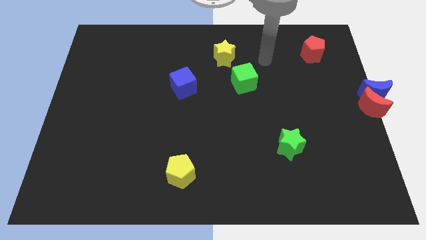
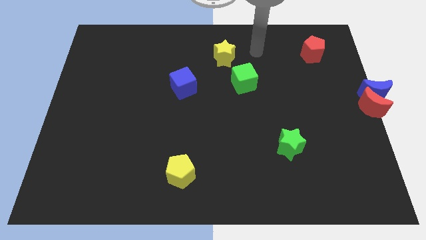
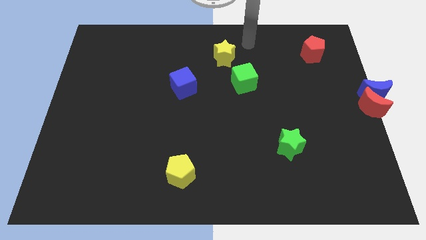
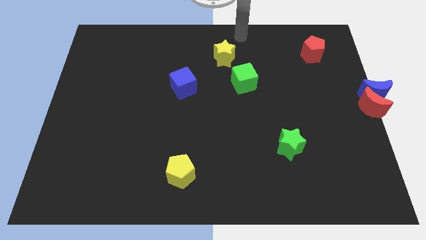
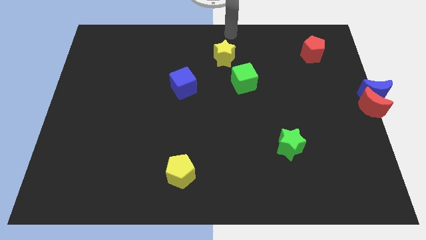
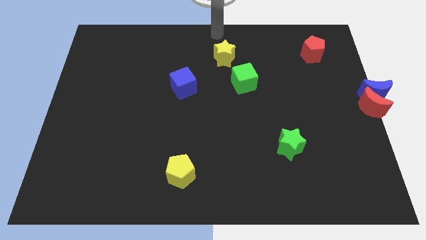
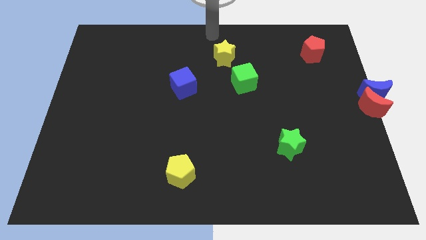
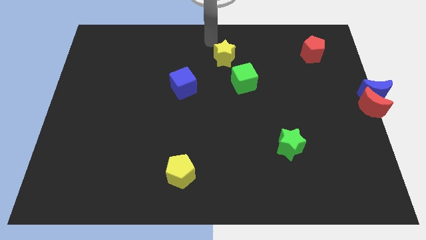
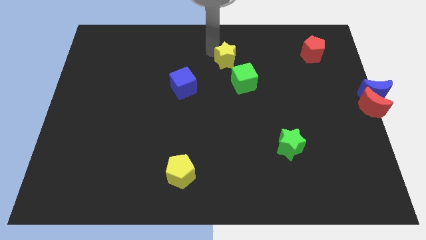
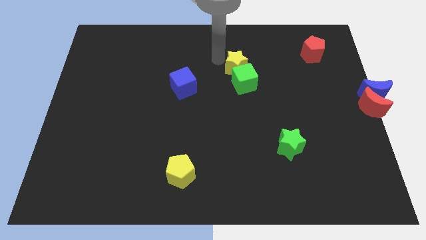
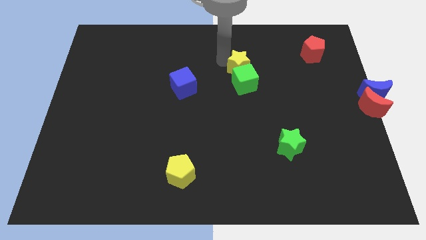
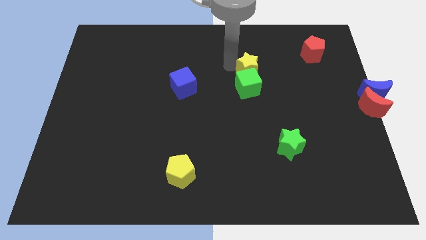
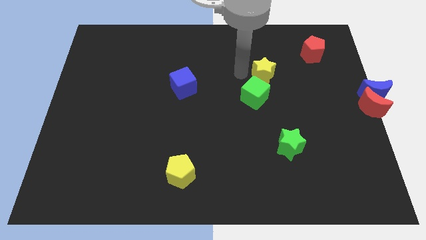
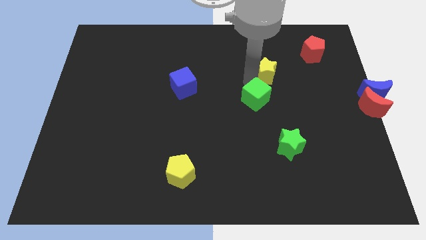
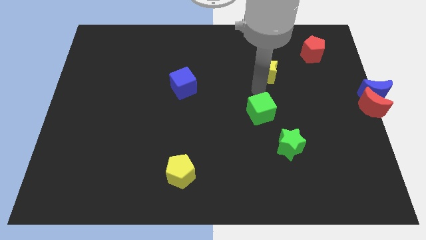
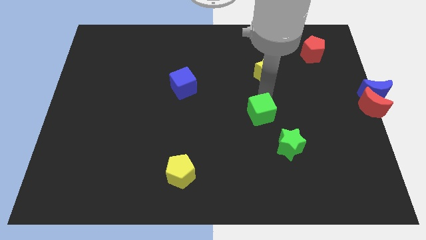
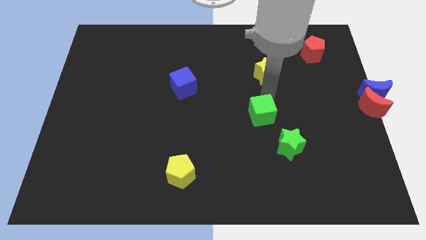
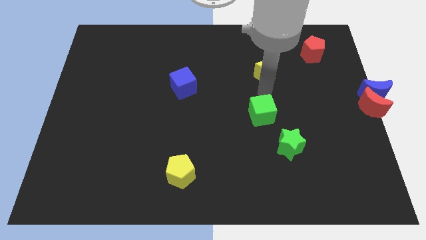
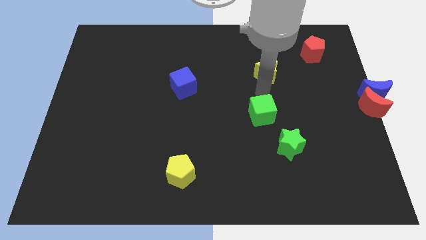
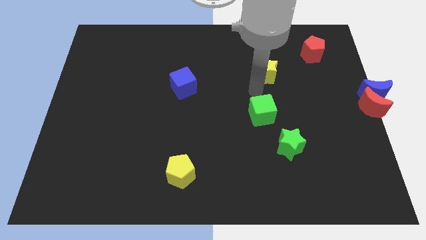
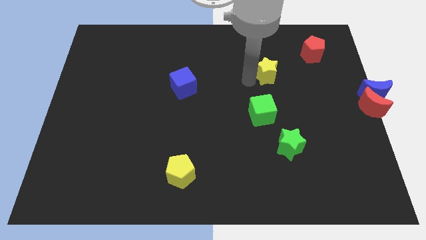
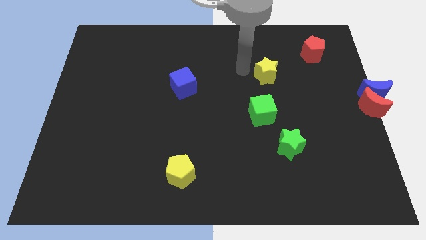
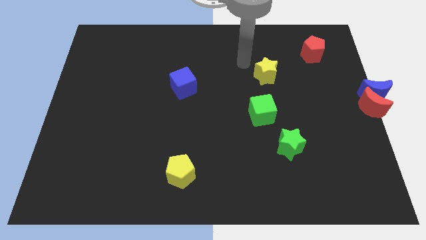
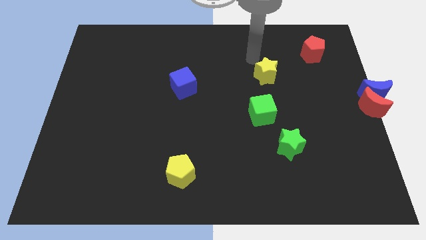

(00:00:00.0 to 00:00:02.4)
push the green cube towards the green star

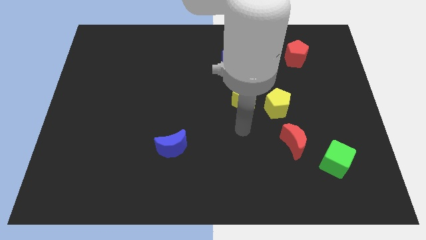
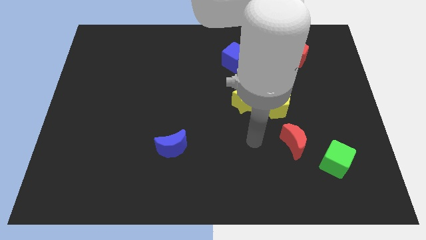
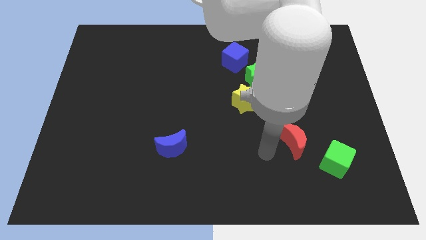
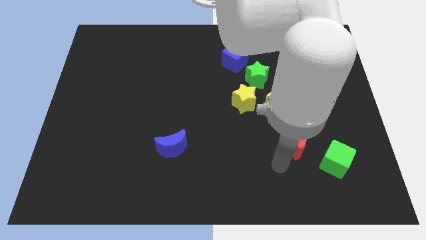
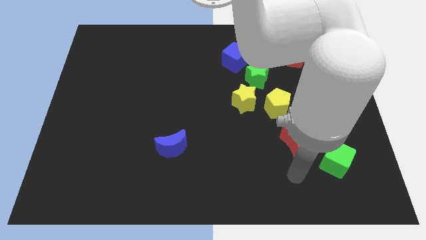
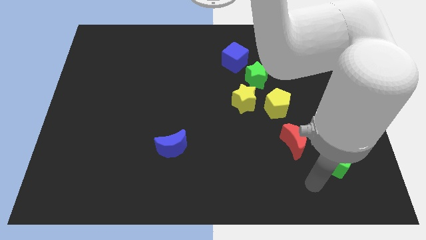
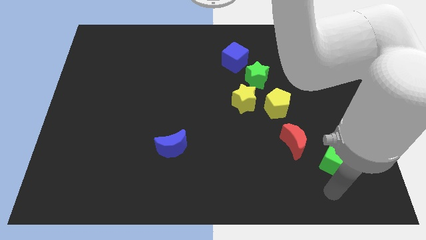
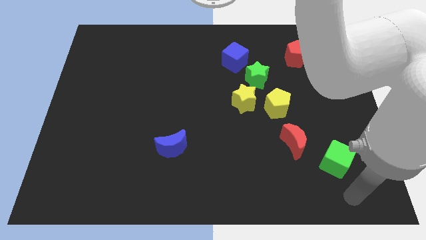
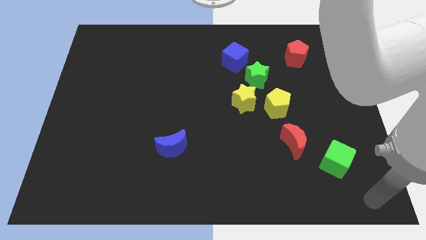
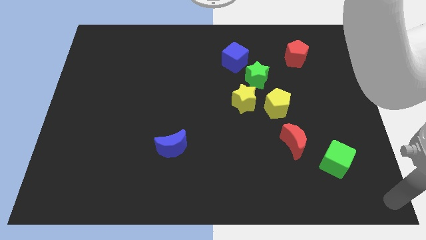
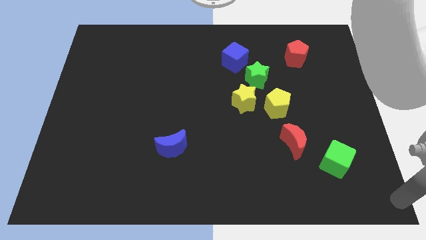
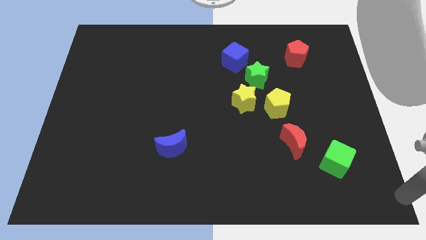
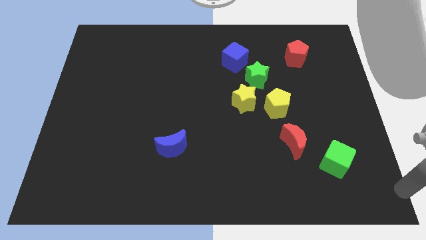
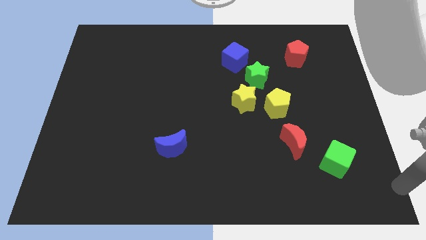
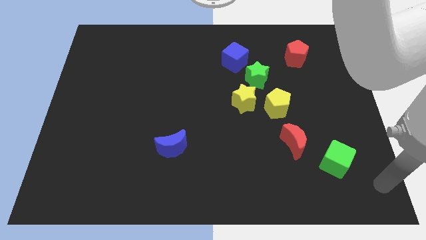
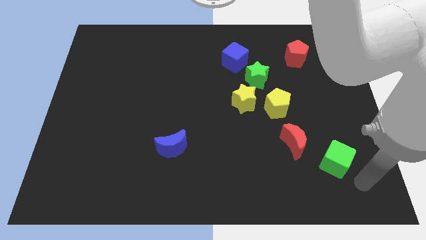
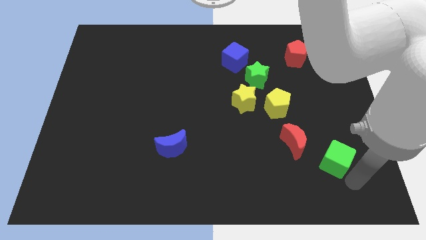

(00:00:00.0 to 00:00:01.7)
place your arm below the green cube

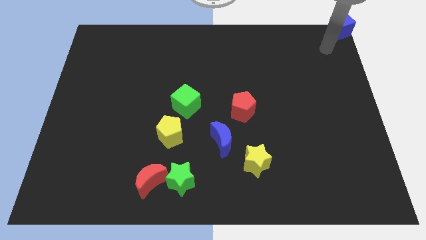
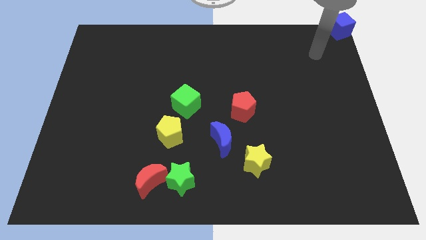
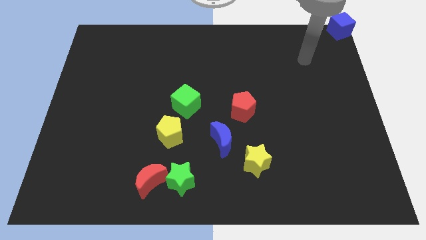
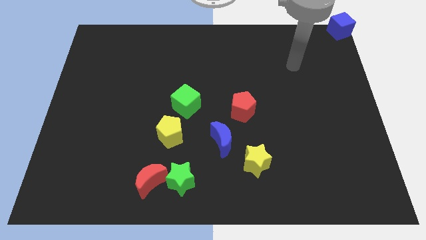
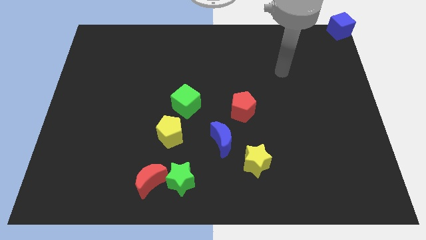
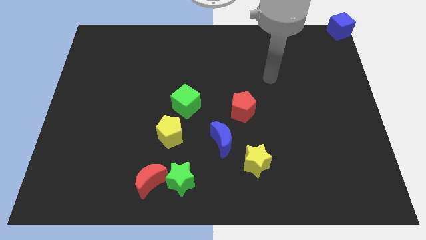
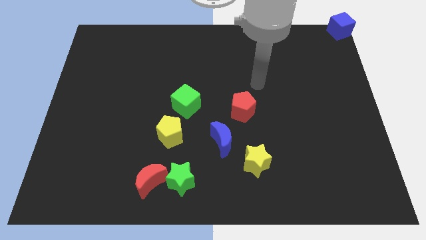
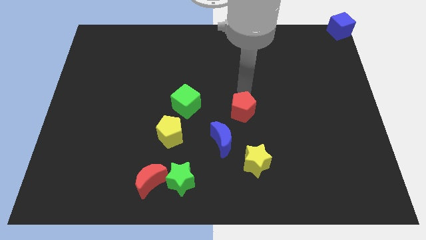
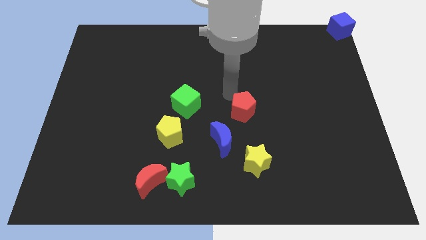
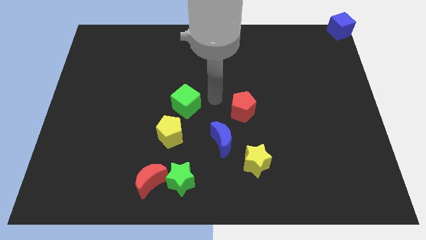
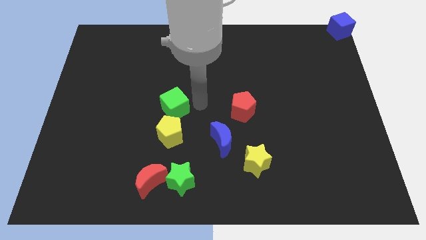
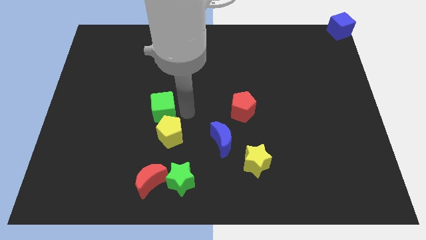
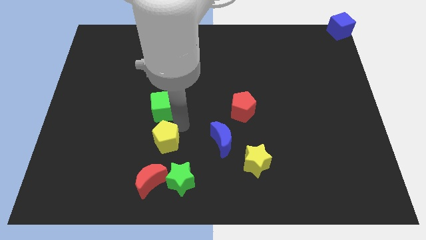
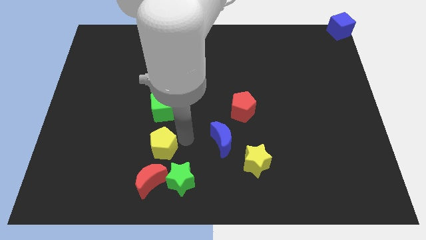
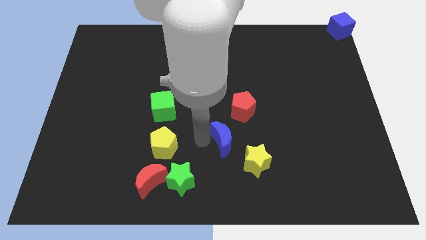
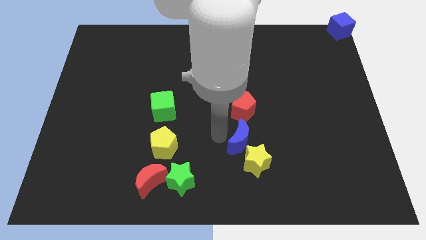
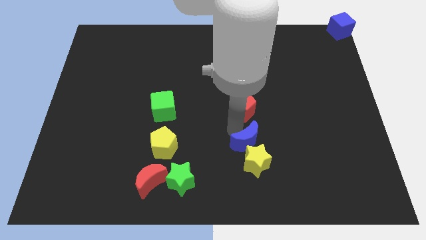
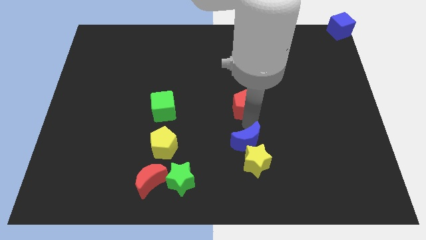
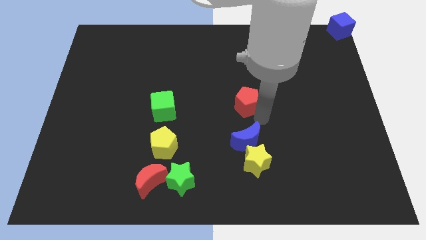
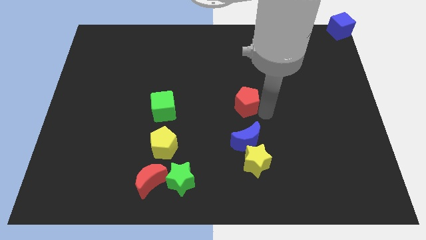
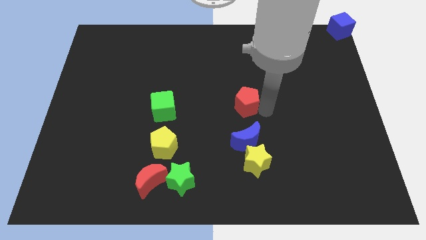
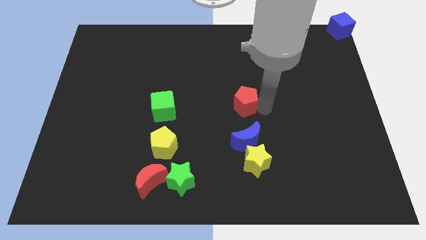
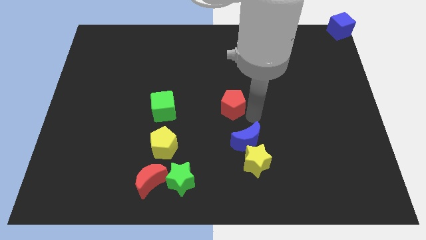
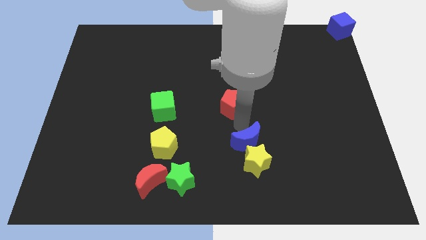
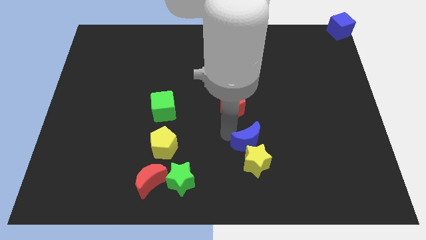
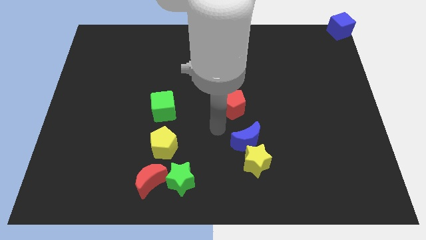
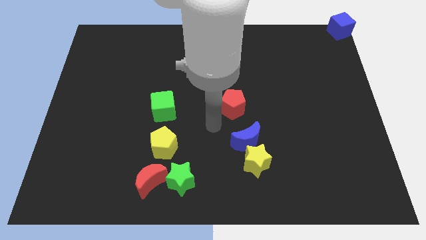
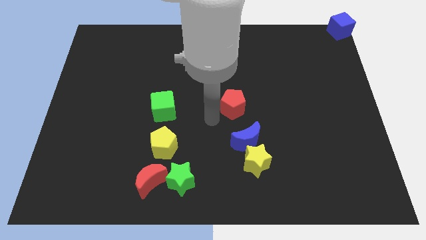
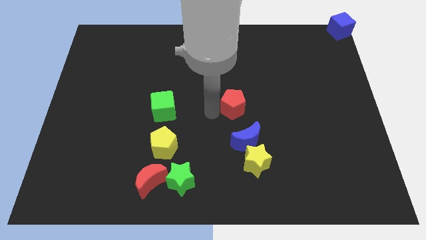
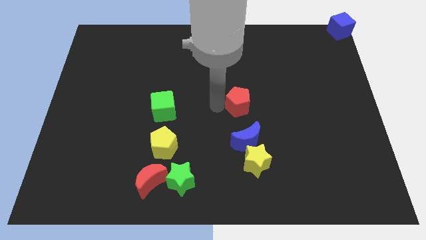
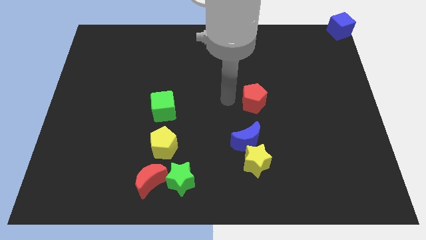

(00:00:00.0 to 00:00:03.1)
move the group of blocks

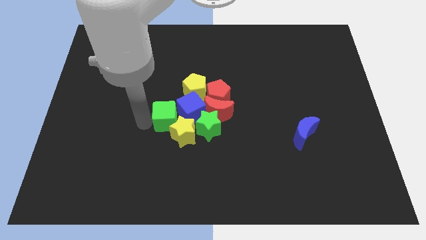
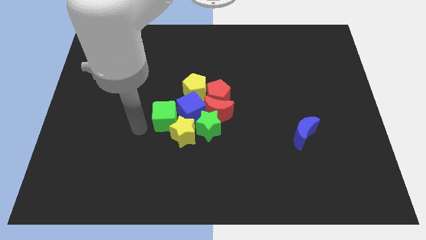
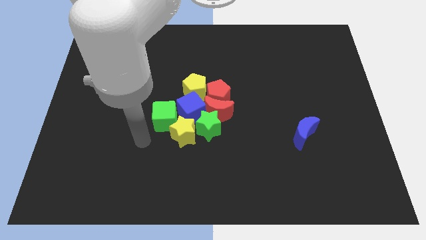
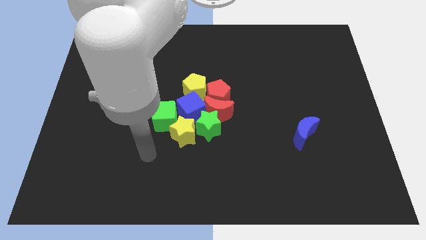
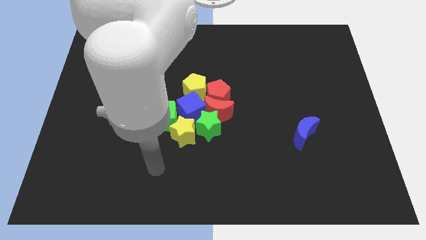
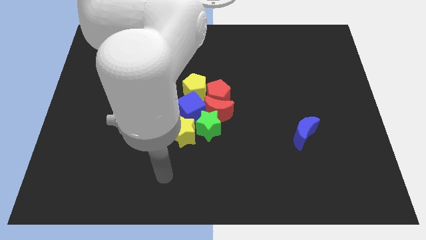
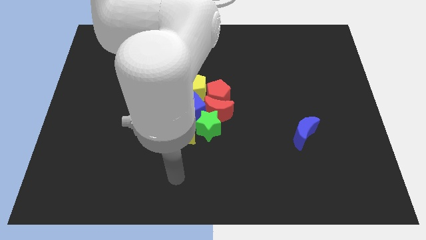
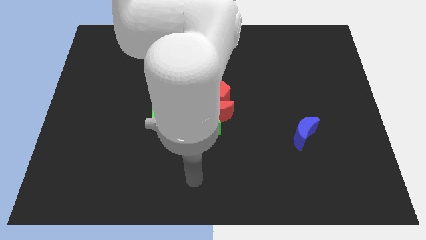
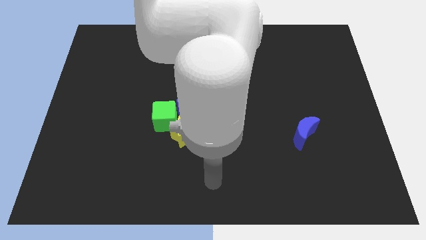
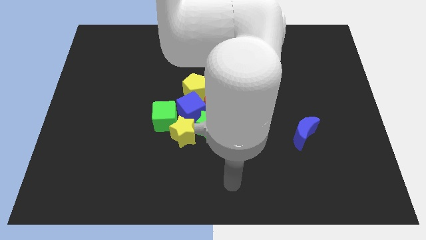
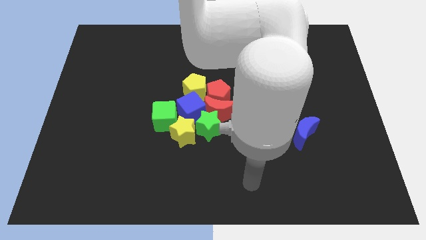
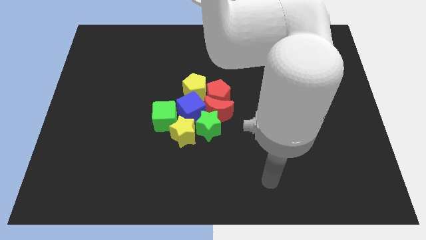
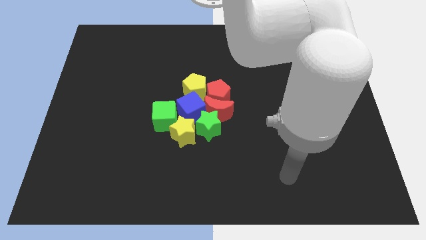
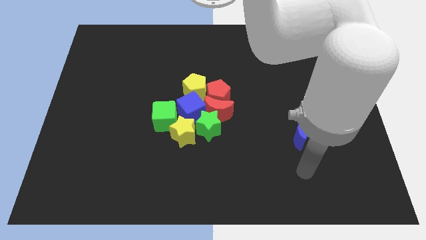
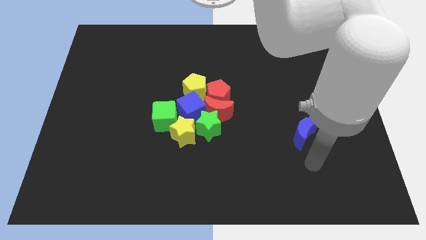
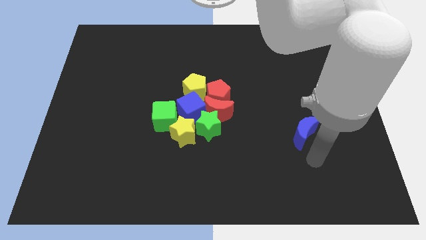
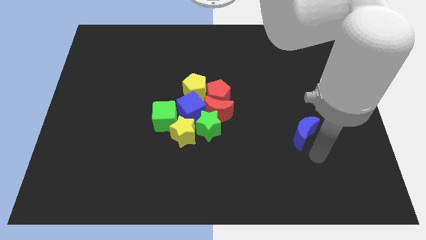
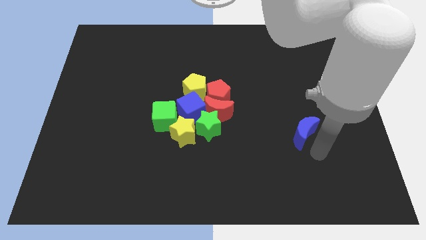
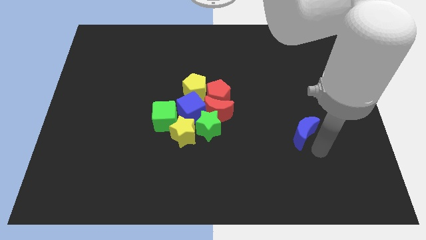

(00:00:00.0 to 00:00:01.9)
move your arm away from green cube
